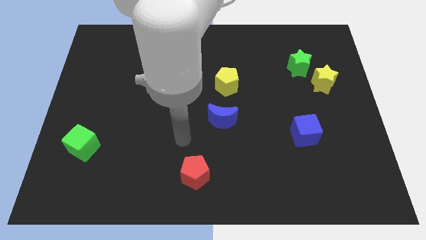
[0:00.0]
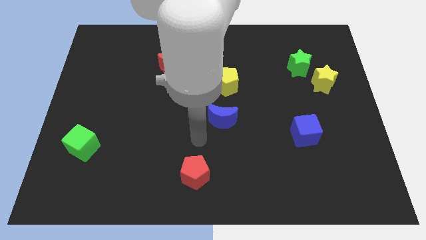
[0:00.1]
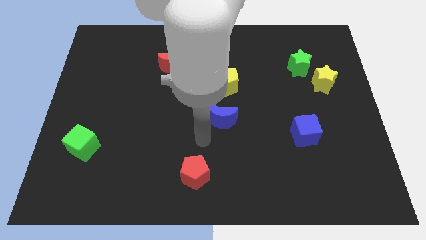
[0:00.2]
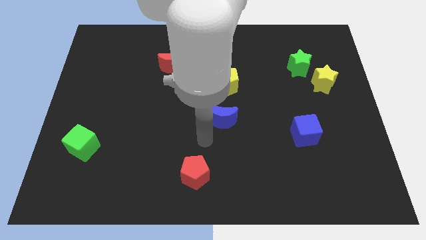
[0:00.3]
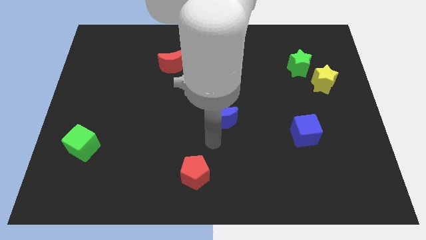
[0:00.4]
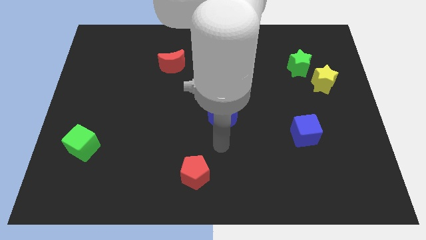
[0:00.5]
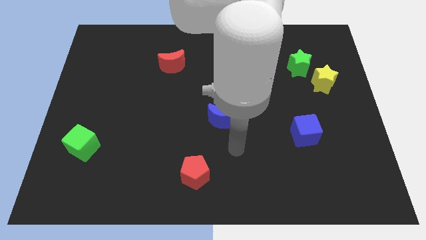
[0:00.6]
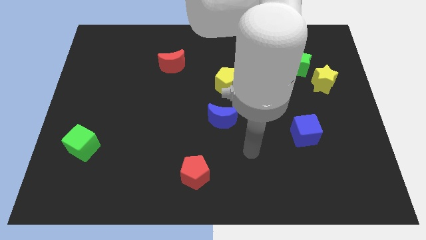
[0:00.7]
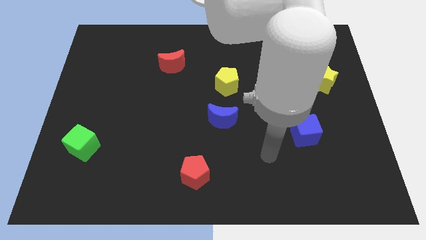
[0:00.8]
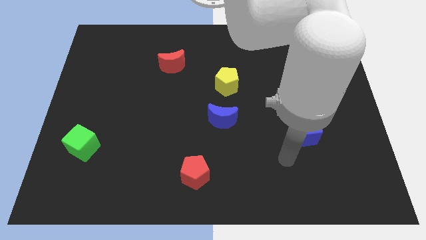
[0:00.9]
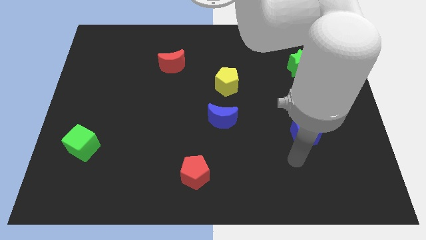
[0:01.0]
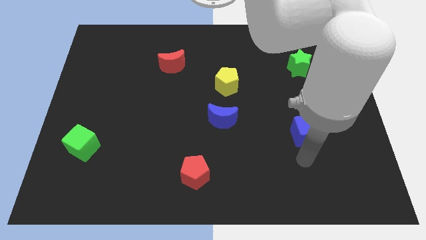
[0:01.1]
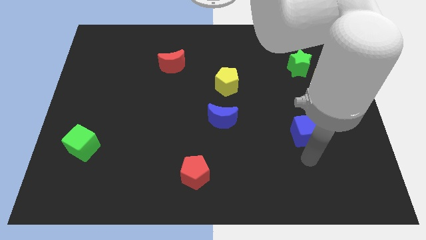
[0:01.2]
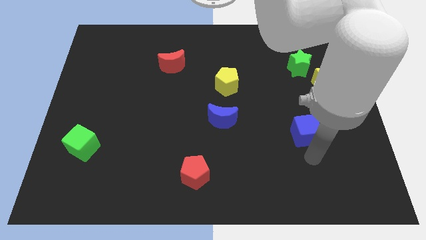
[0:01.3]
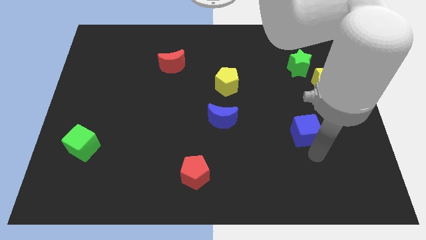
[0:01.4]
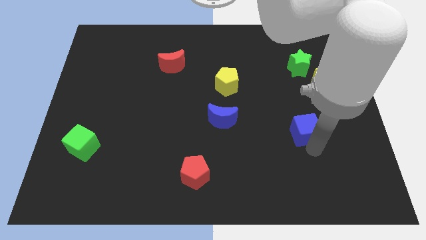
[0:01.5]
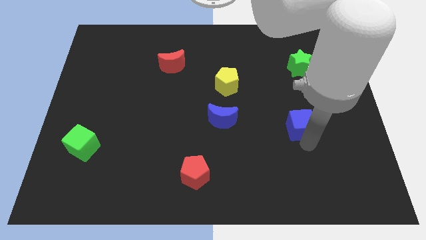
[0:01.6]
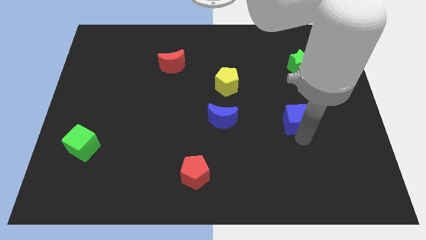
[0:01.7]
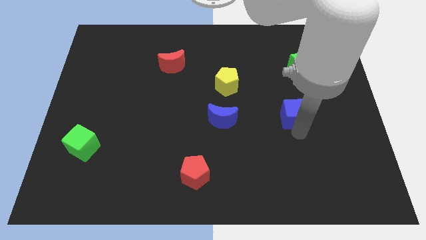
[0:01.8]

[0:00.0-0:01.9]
slightly push the blue cube on the top

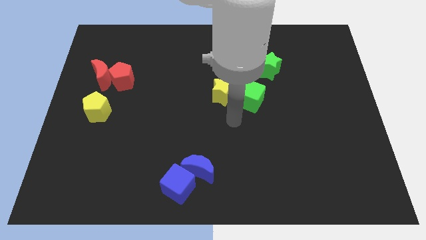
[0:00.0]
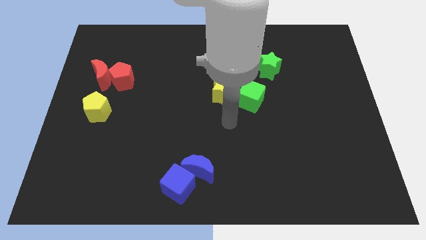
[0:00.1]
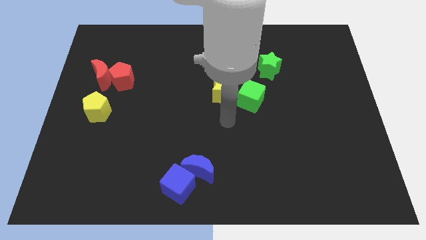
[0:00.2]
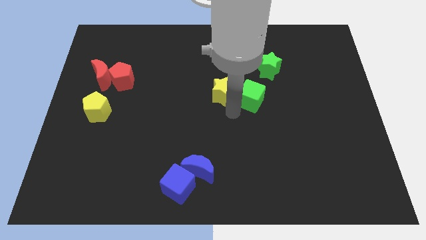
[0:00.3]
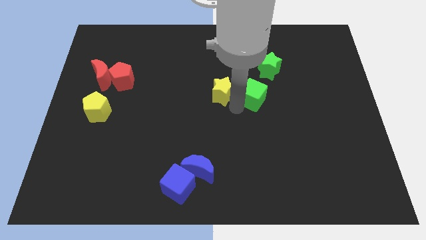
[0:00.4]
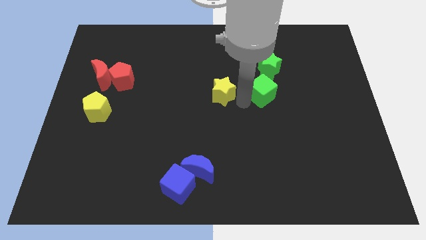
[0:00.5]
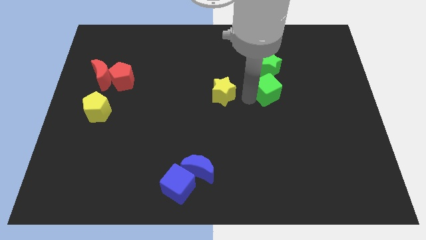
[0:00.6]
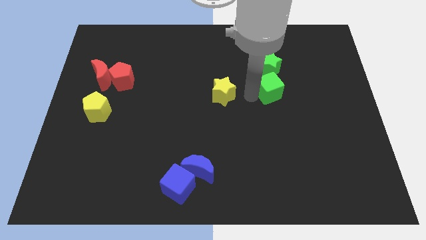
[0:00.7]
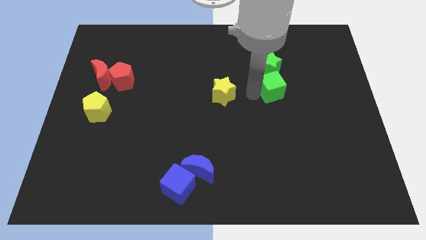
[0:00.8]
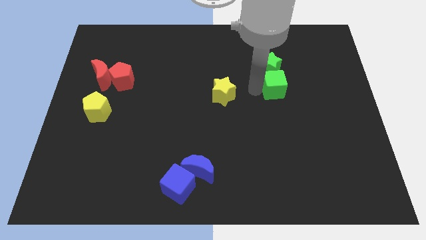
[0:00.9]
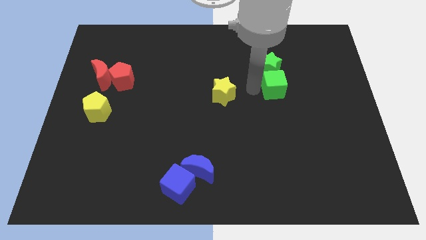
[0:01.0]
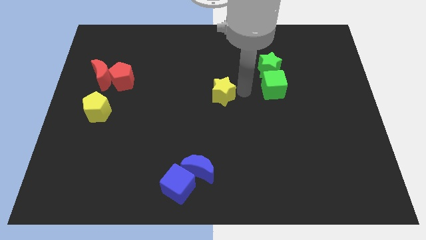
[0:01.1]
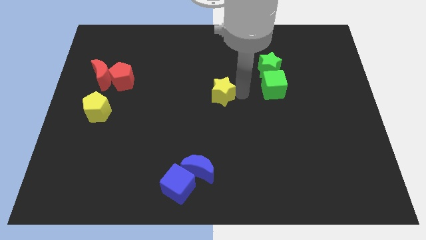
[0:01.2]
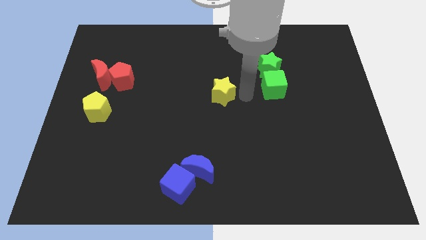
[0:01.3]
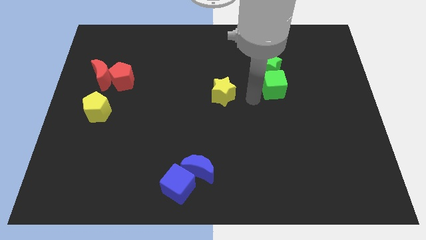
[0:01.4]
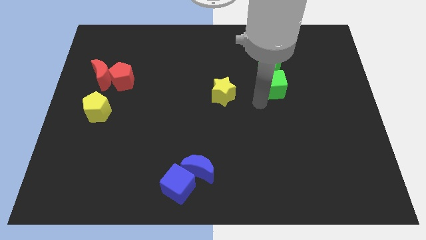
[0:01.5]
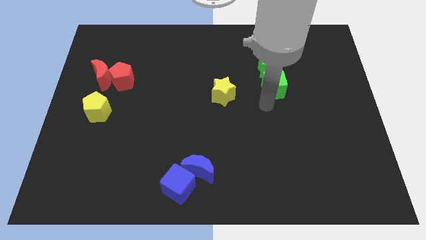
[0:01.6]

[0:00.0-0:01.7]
place the green cube below the green star

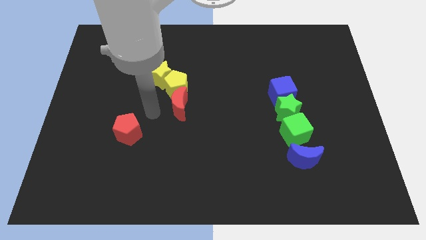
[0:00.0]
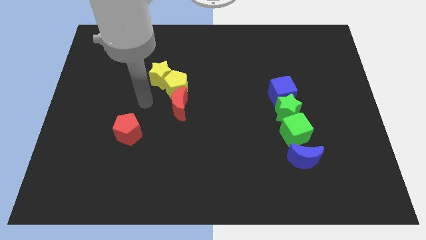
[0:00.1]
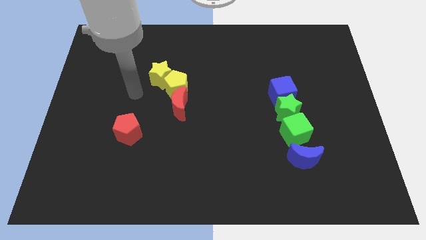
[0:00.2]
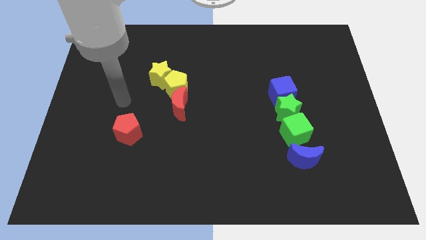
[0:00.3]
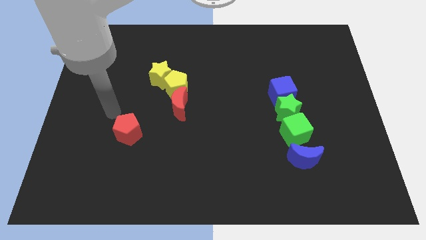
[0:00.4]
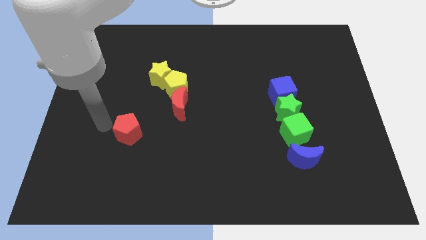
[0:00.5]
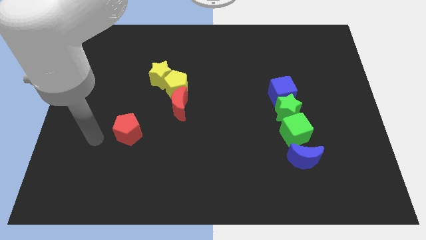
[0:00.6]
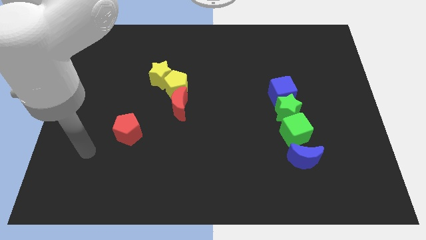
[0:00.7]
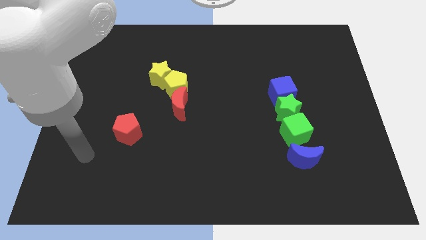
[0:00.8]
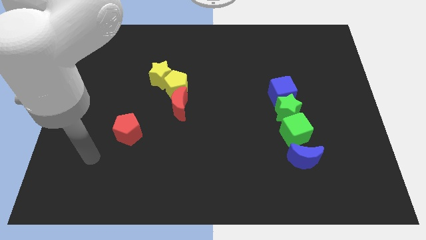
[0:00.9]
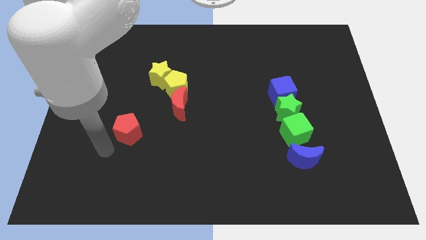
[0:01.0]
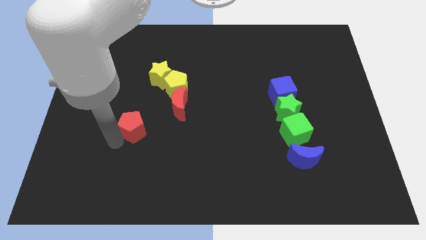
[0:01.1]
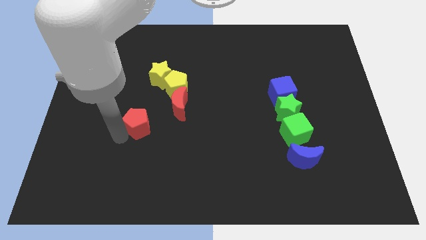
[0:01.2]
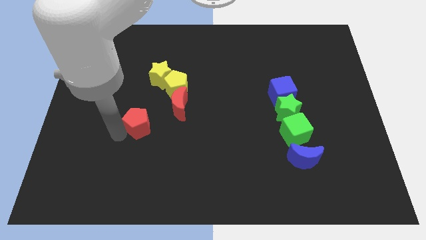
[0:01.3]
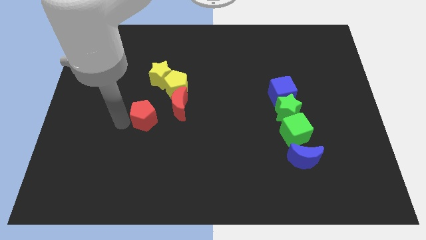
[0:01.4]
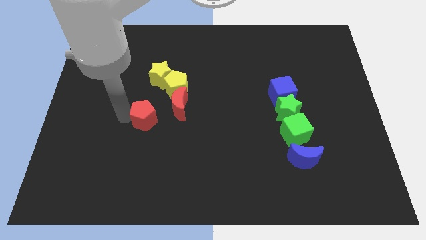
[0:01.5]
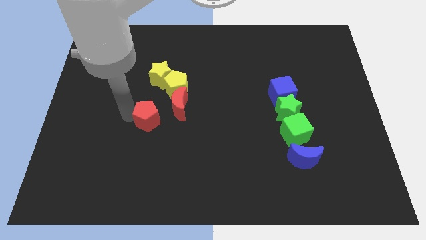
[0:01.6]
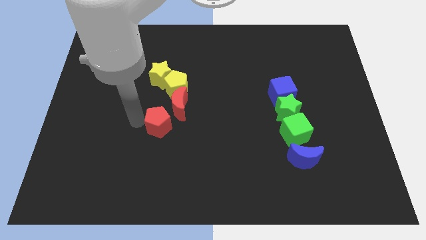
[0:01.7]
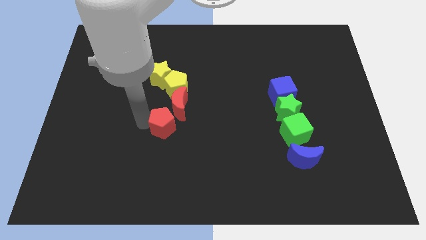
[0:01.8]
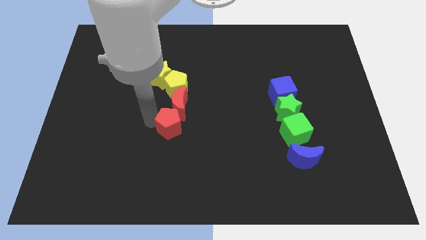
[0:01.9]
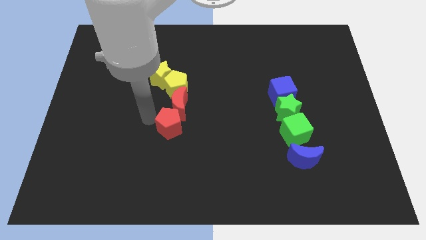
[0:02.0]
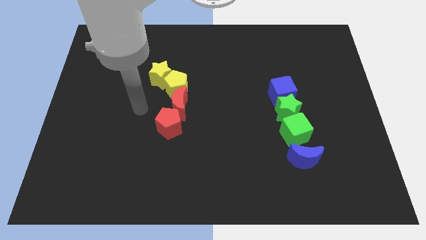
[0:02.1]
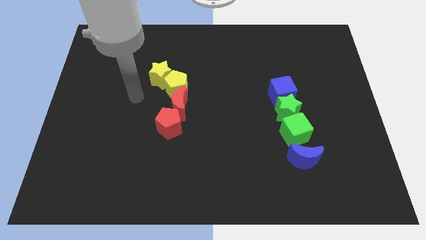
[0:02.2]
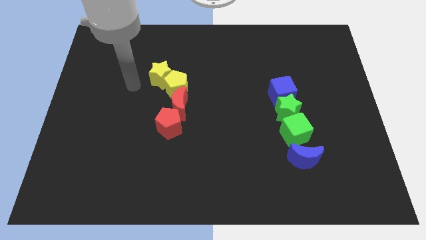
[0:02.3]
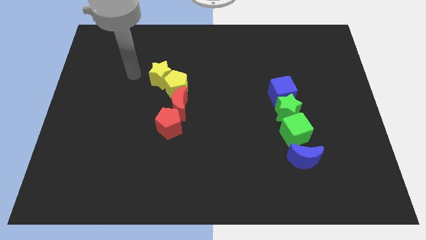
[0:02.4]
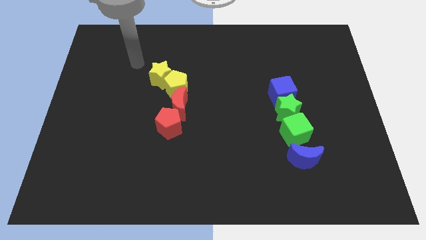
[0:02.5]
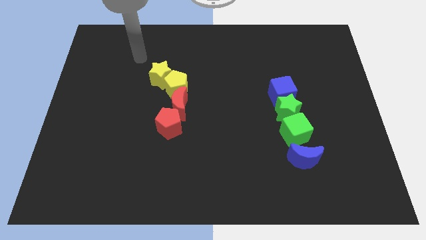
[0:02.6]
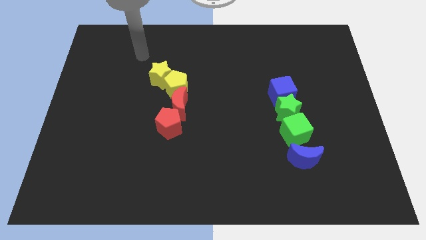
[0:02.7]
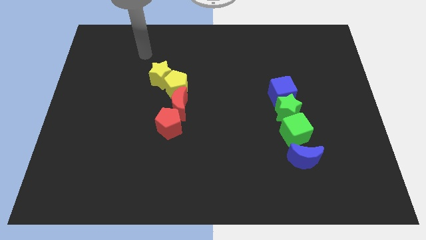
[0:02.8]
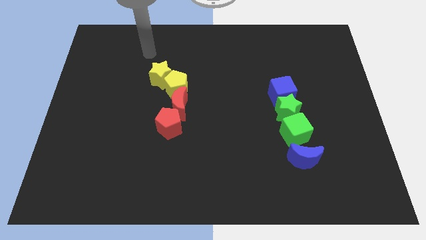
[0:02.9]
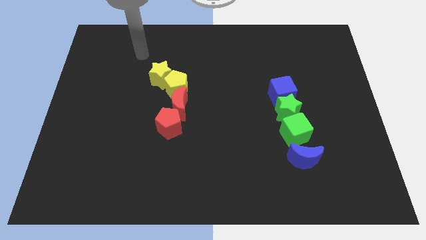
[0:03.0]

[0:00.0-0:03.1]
place the red pentagon below the red moon

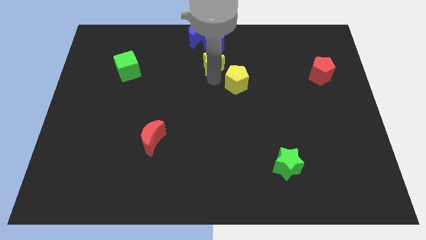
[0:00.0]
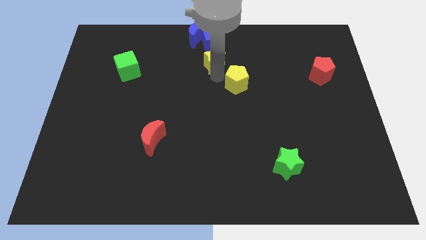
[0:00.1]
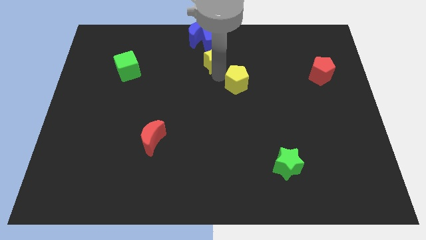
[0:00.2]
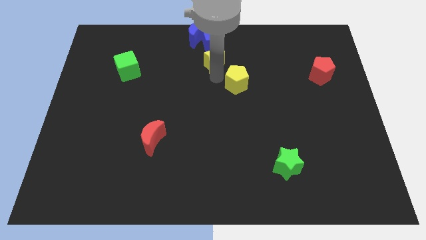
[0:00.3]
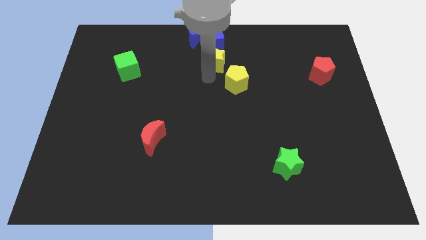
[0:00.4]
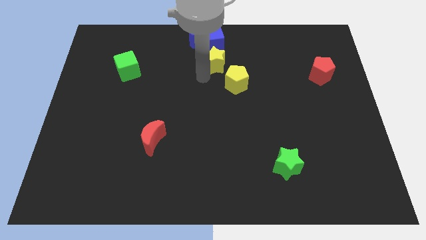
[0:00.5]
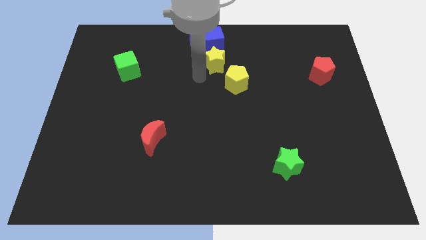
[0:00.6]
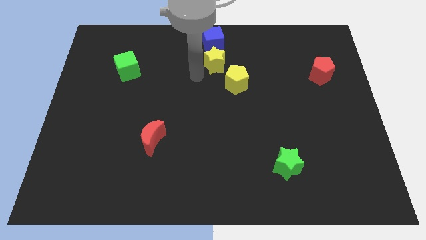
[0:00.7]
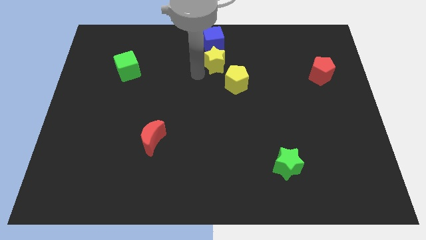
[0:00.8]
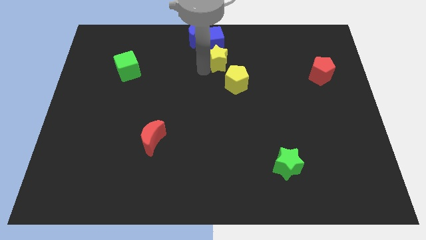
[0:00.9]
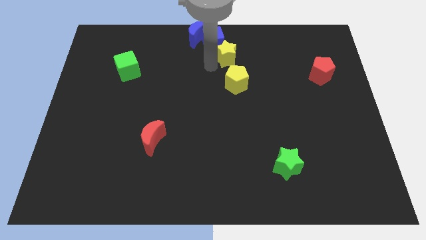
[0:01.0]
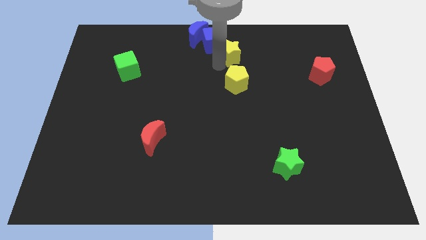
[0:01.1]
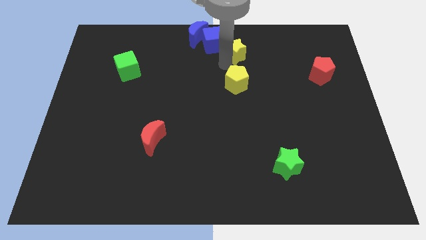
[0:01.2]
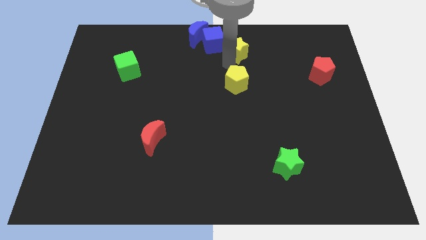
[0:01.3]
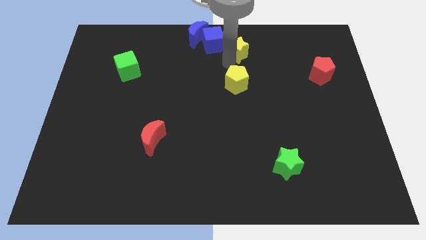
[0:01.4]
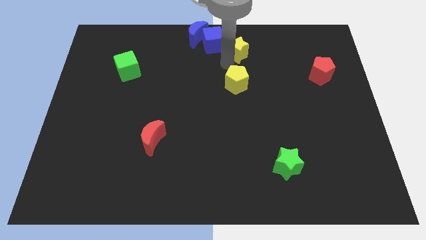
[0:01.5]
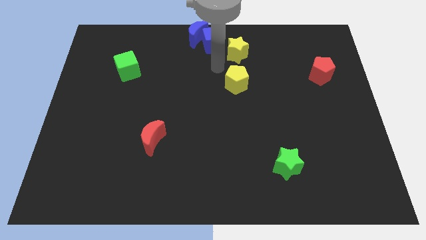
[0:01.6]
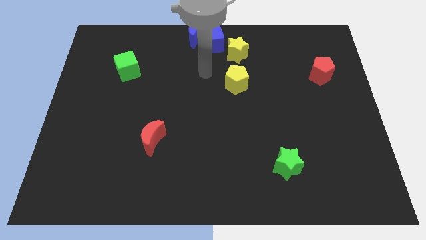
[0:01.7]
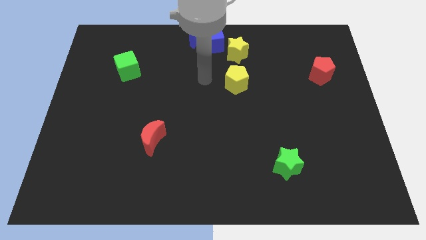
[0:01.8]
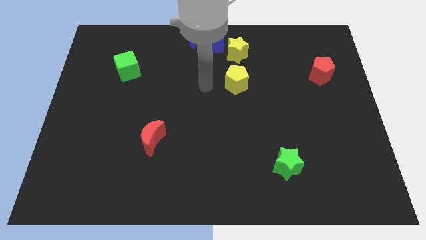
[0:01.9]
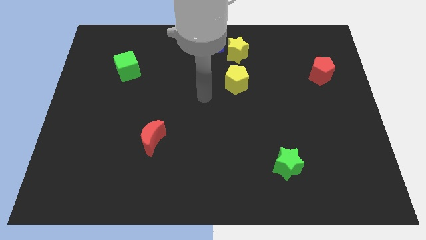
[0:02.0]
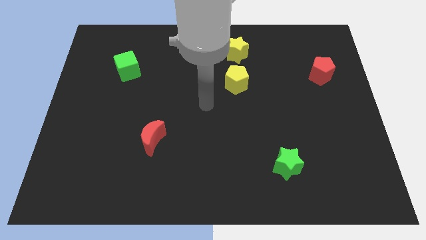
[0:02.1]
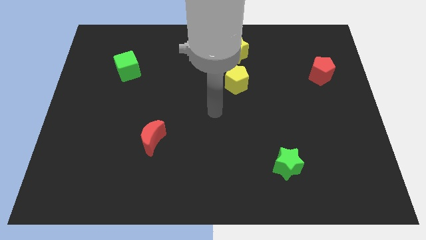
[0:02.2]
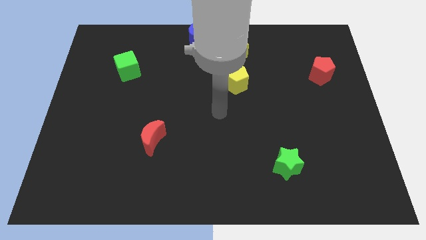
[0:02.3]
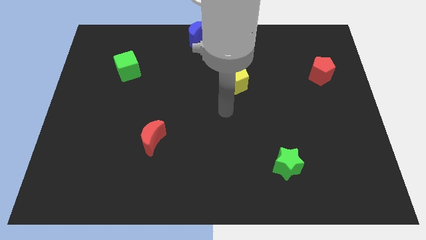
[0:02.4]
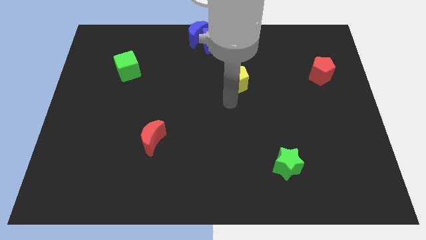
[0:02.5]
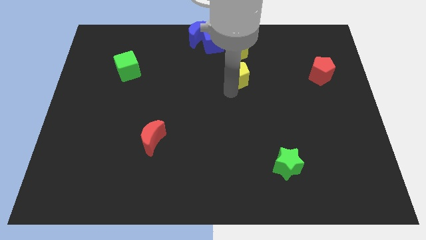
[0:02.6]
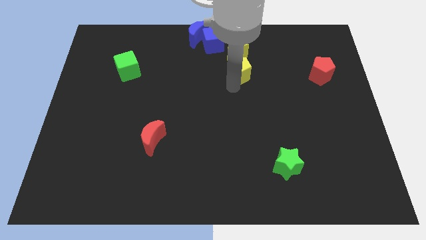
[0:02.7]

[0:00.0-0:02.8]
push the yellow star to the right
